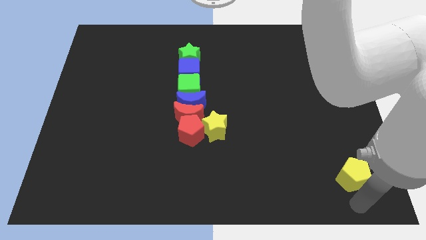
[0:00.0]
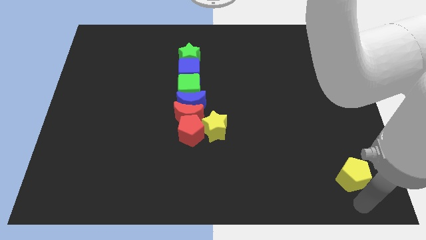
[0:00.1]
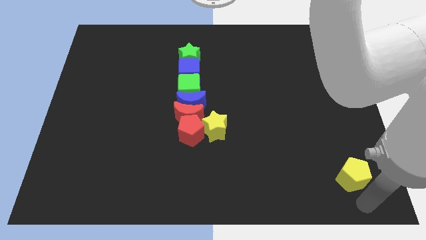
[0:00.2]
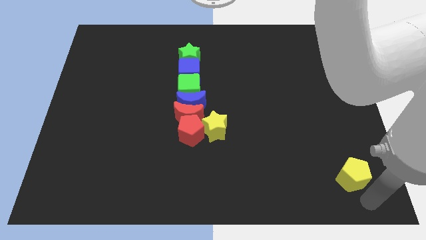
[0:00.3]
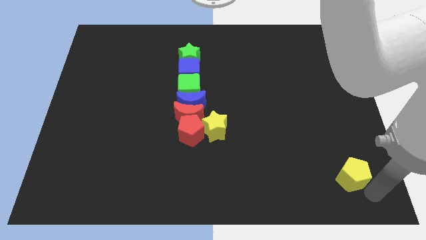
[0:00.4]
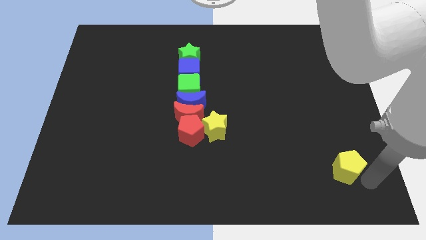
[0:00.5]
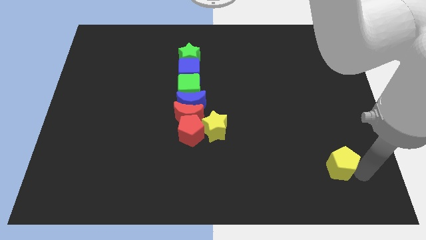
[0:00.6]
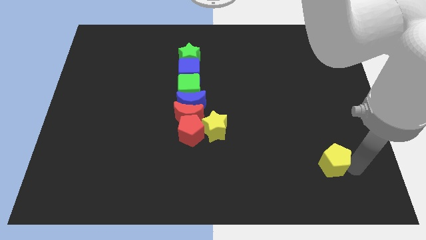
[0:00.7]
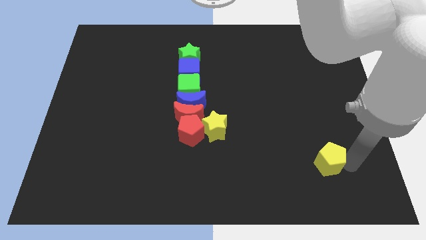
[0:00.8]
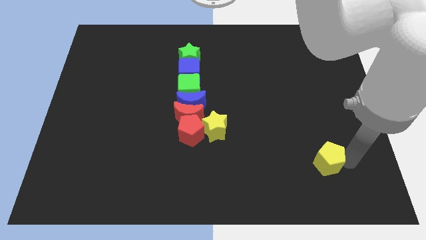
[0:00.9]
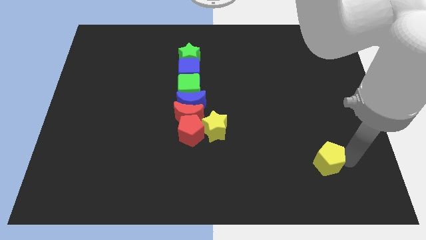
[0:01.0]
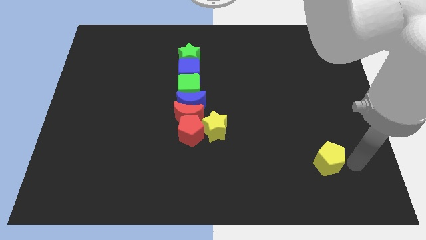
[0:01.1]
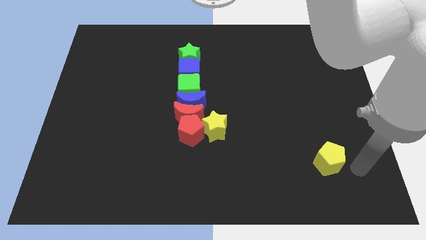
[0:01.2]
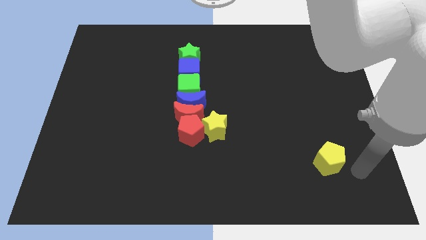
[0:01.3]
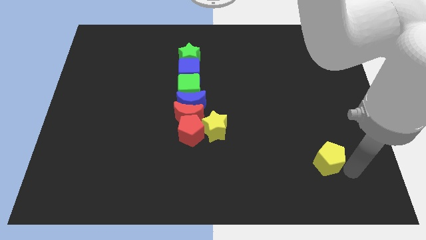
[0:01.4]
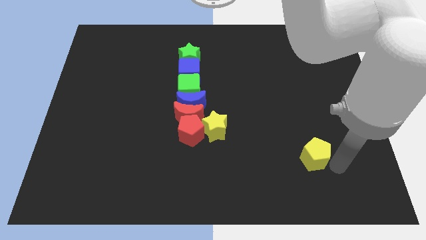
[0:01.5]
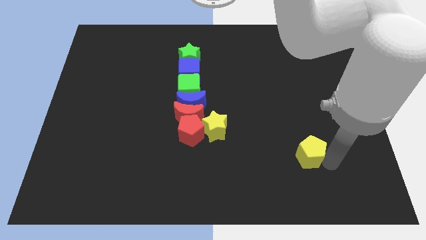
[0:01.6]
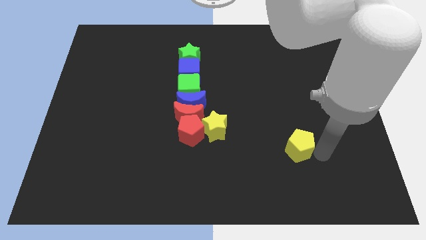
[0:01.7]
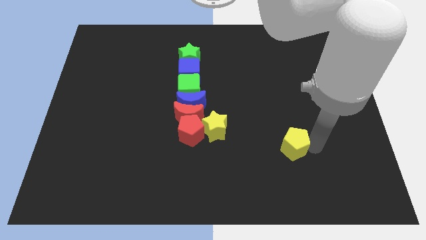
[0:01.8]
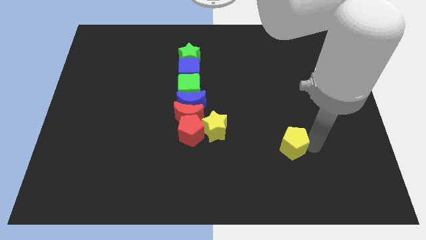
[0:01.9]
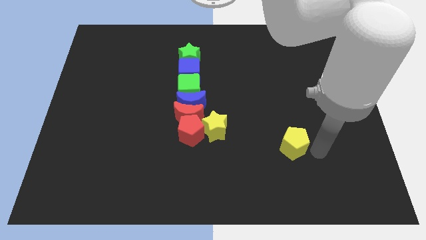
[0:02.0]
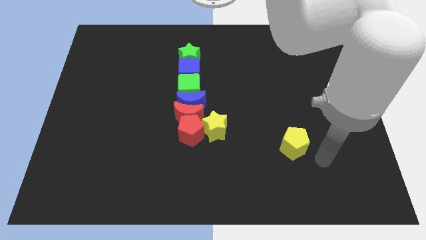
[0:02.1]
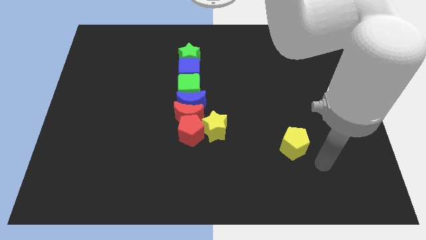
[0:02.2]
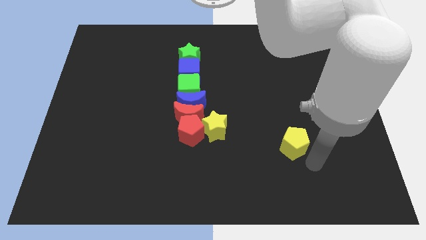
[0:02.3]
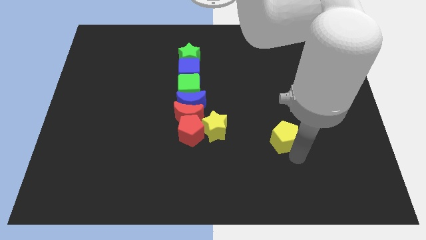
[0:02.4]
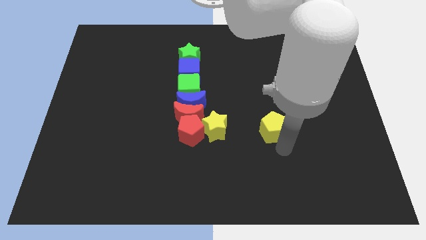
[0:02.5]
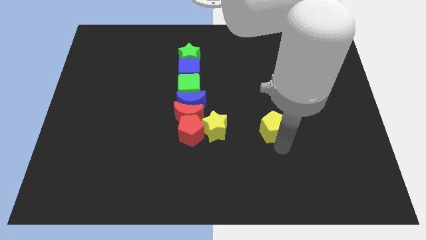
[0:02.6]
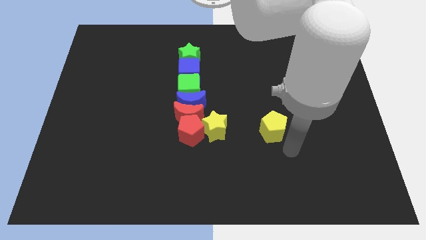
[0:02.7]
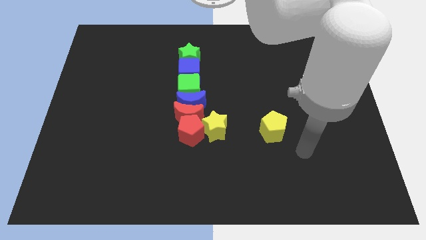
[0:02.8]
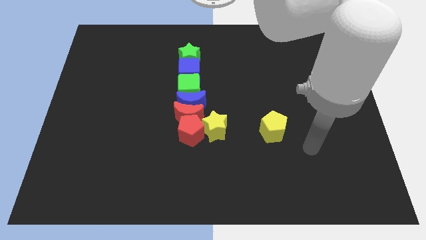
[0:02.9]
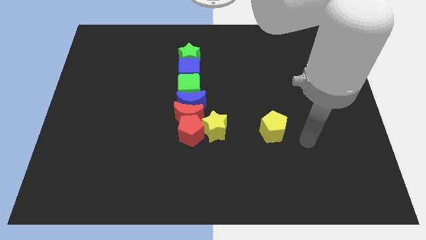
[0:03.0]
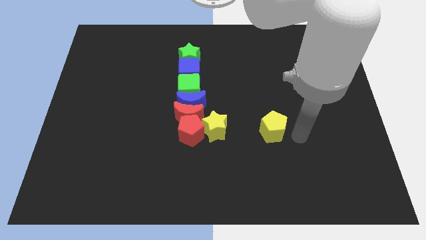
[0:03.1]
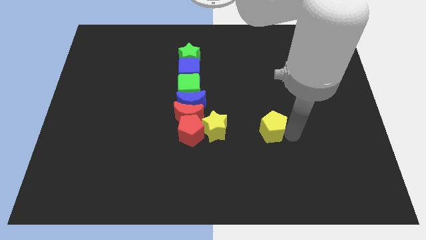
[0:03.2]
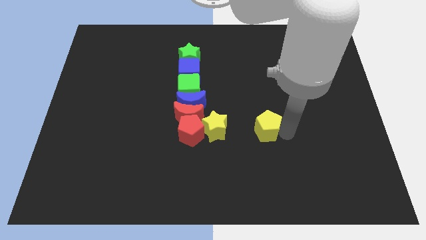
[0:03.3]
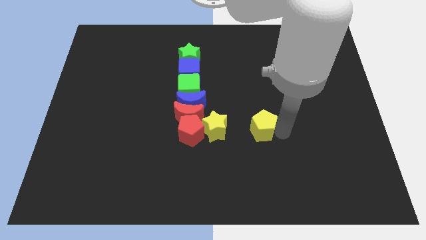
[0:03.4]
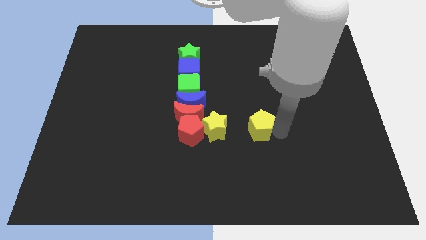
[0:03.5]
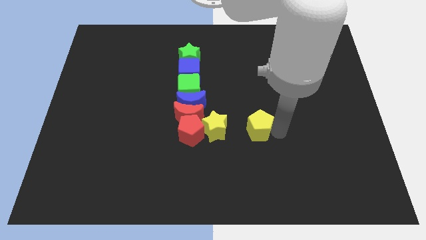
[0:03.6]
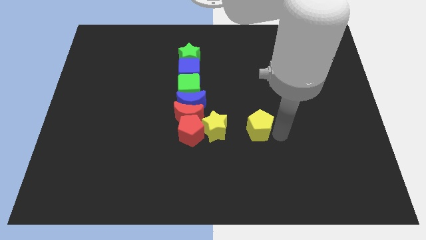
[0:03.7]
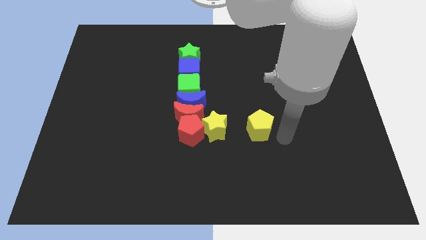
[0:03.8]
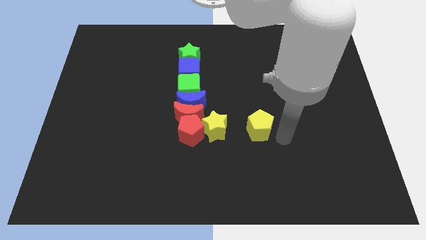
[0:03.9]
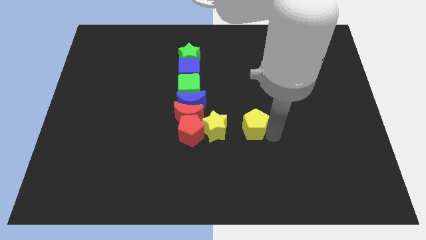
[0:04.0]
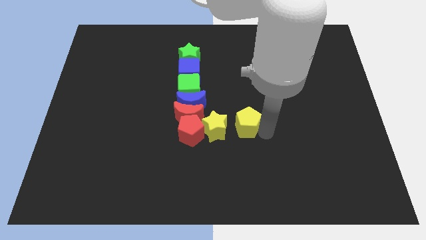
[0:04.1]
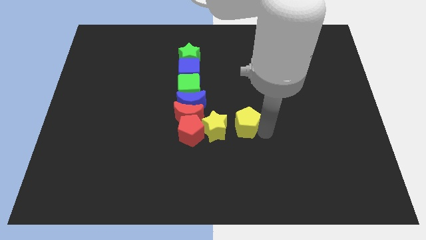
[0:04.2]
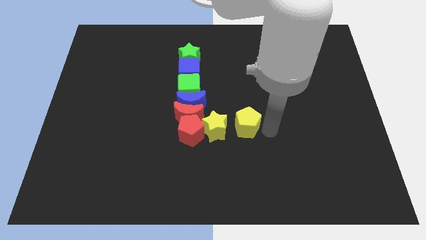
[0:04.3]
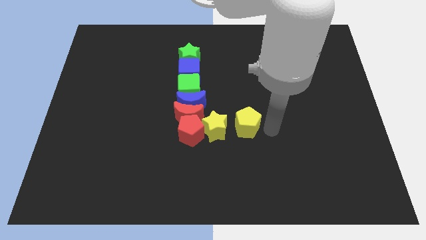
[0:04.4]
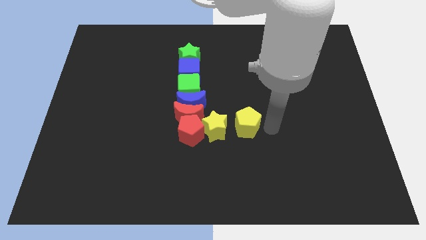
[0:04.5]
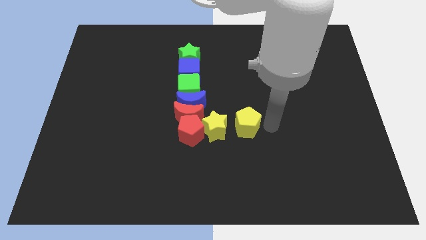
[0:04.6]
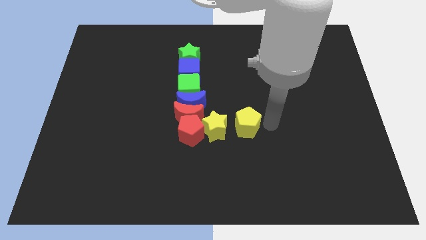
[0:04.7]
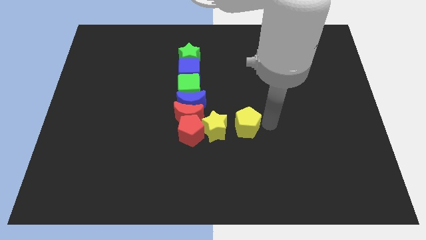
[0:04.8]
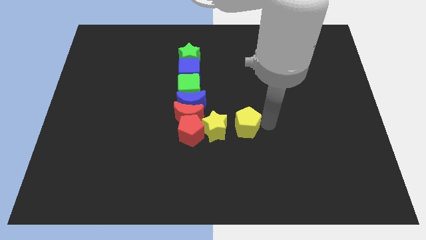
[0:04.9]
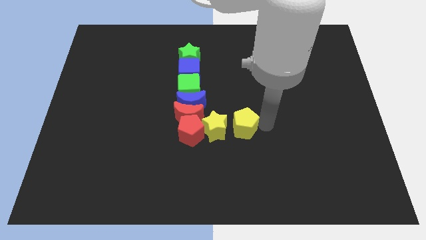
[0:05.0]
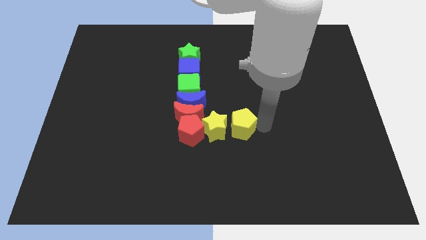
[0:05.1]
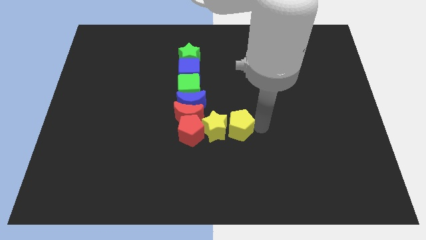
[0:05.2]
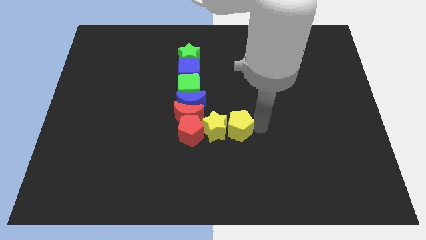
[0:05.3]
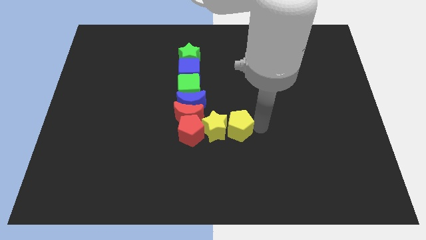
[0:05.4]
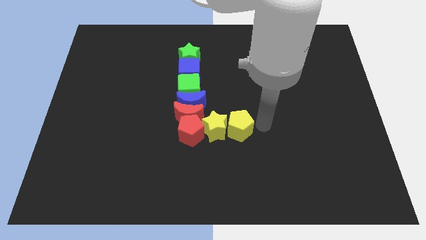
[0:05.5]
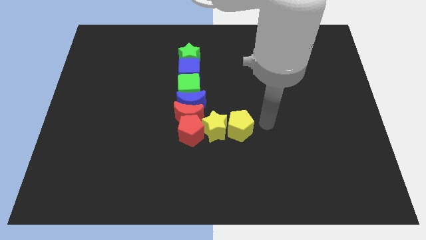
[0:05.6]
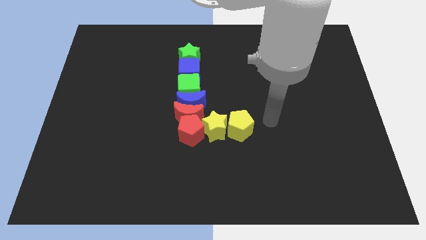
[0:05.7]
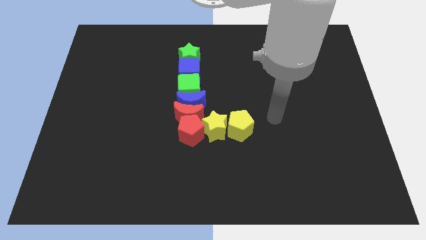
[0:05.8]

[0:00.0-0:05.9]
push the yellow pentagon to the right of the yellow star

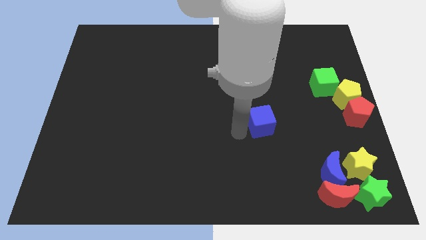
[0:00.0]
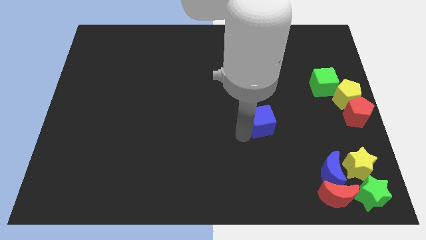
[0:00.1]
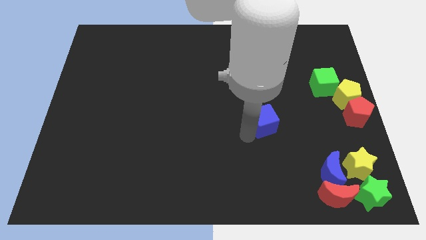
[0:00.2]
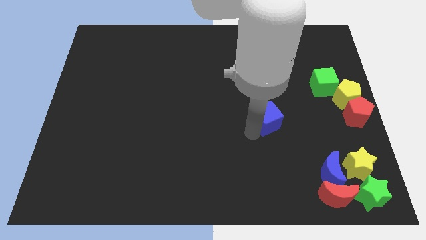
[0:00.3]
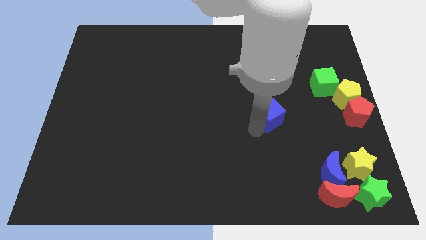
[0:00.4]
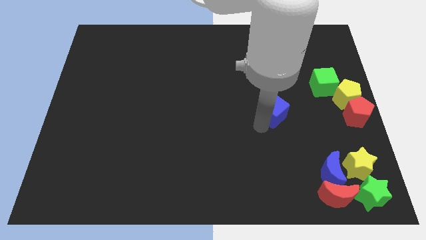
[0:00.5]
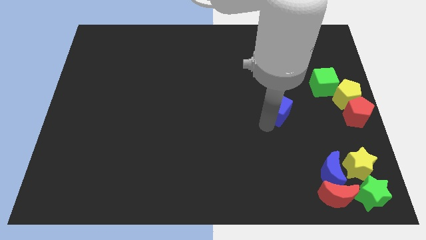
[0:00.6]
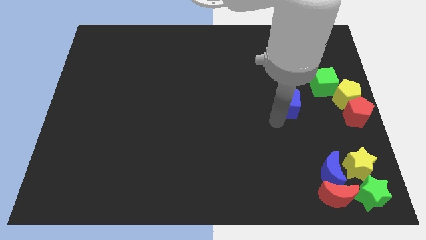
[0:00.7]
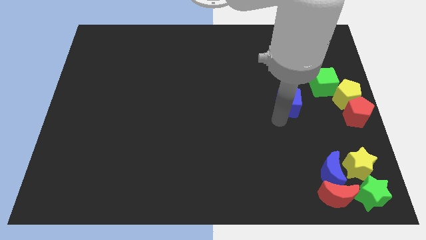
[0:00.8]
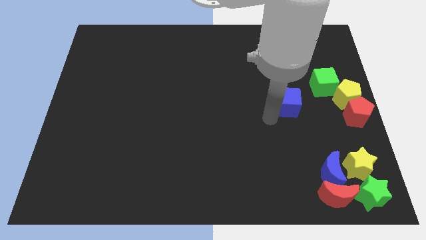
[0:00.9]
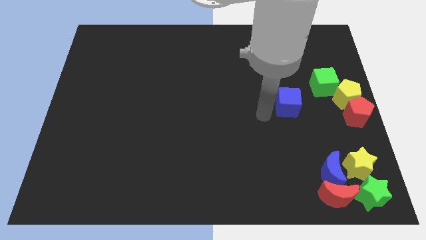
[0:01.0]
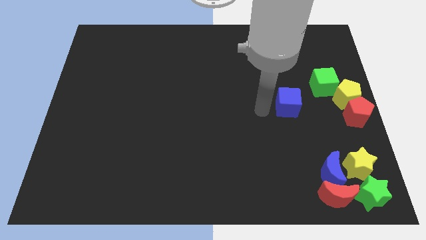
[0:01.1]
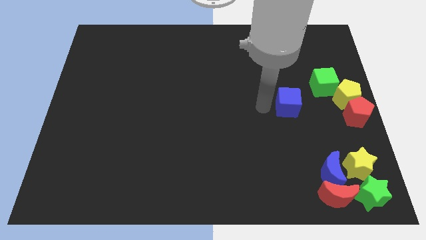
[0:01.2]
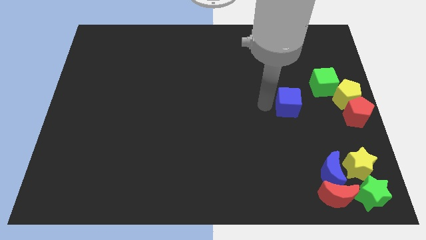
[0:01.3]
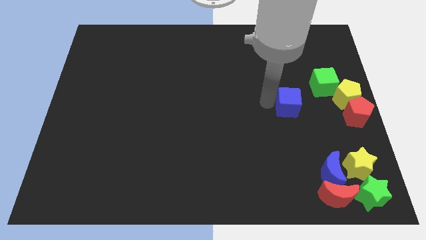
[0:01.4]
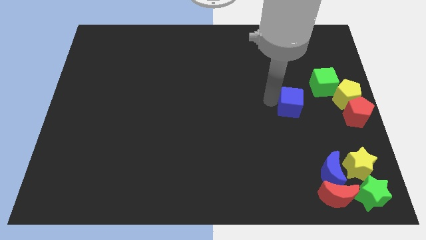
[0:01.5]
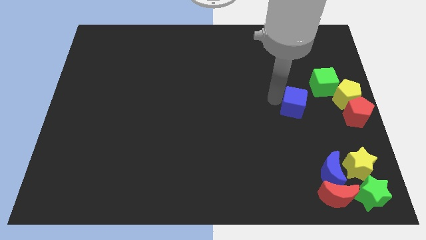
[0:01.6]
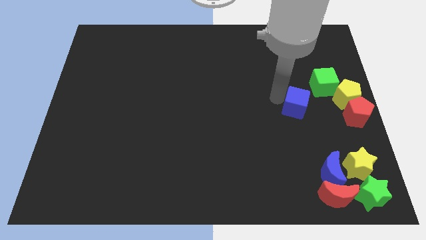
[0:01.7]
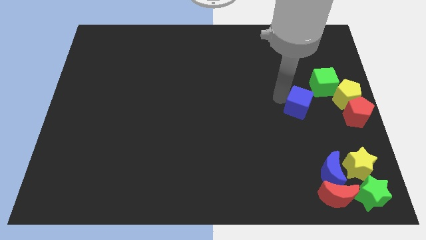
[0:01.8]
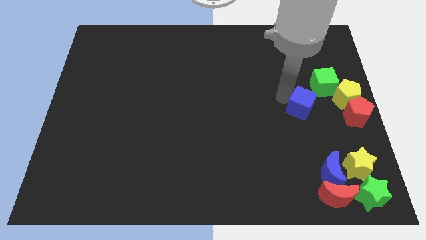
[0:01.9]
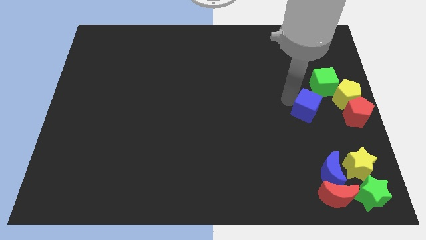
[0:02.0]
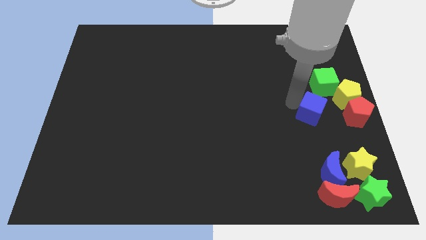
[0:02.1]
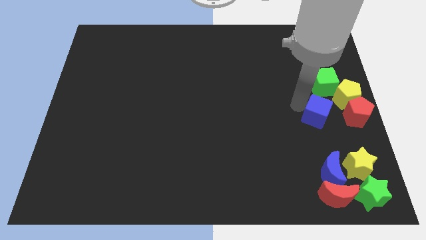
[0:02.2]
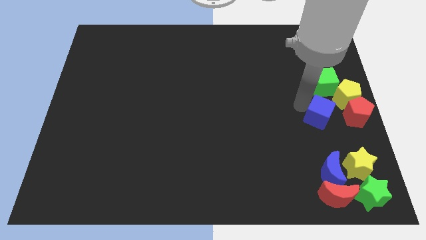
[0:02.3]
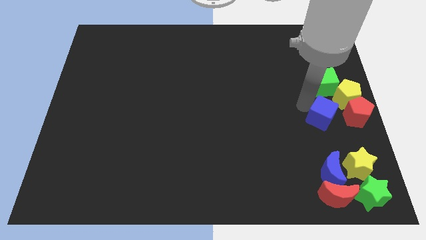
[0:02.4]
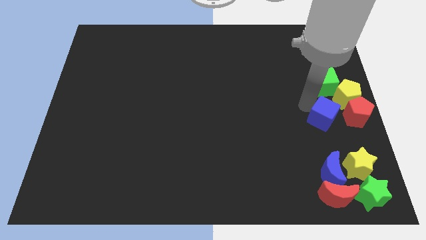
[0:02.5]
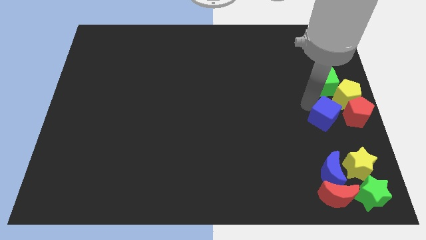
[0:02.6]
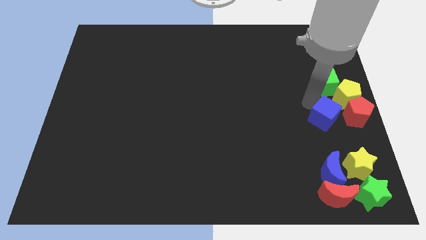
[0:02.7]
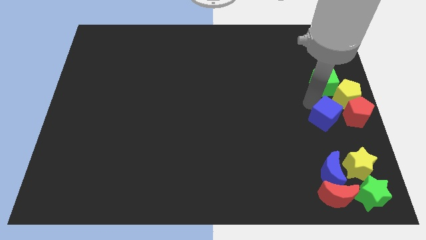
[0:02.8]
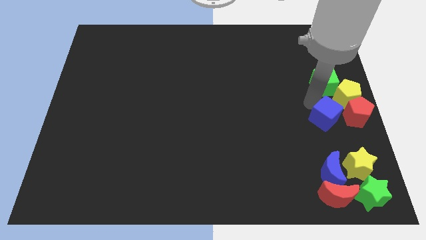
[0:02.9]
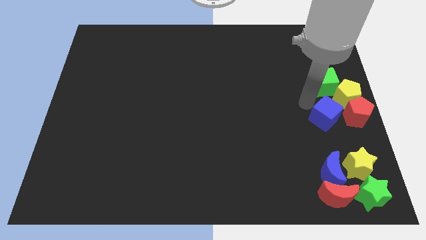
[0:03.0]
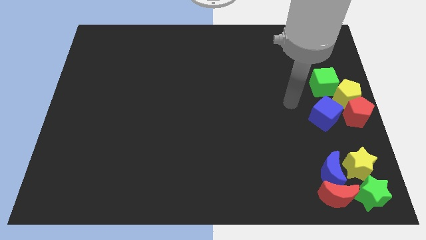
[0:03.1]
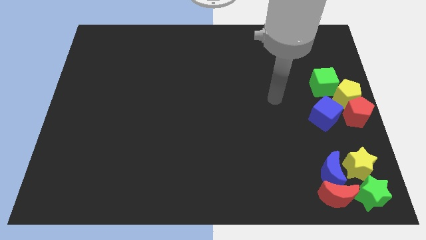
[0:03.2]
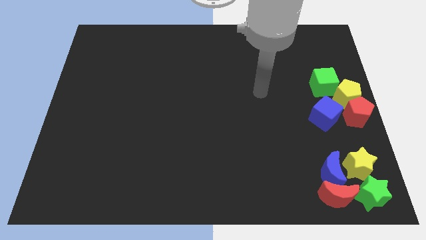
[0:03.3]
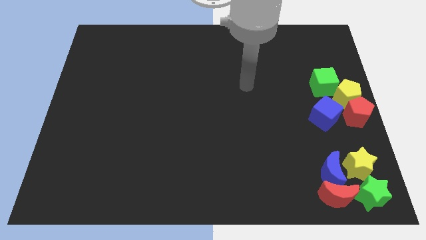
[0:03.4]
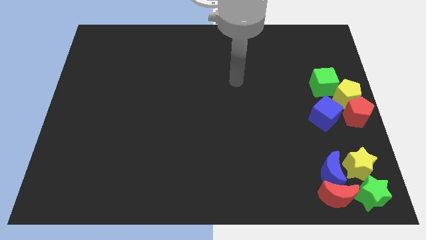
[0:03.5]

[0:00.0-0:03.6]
move the blue cube close to the red pentagon and yellow pentagon
